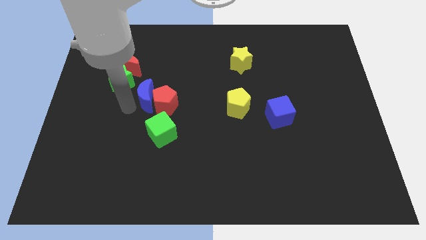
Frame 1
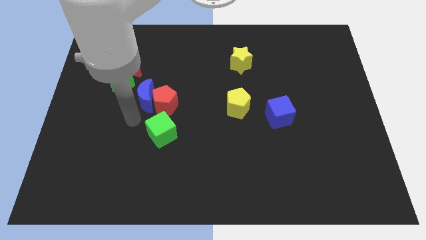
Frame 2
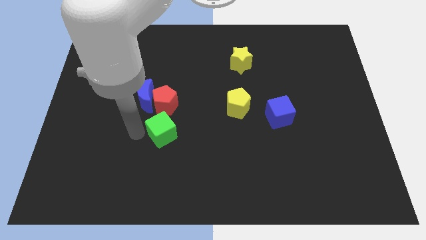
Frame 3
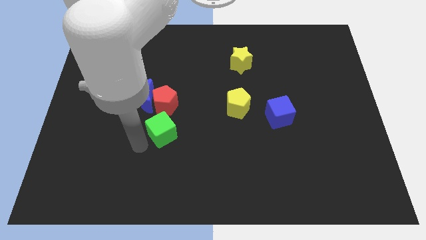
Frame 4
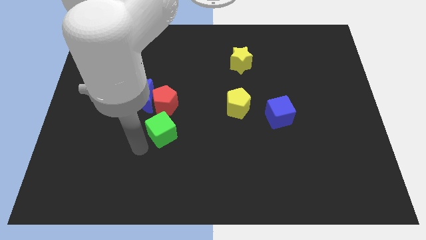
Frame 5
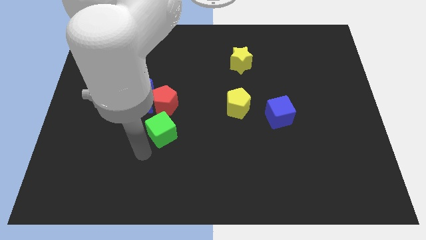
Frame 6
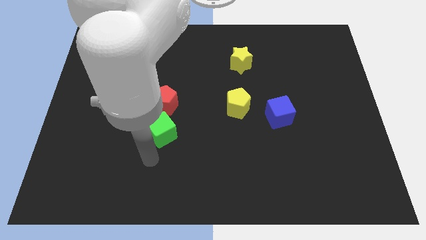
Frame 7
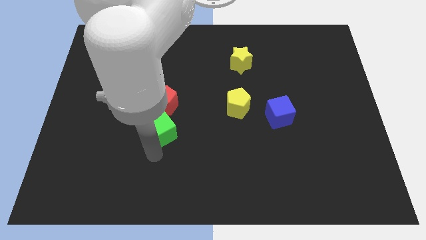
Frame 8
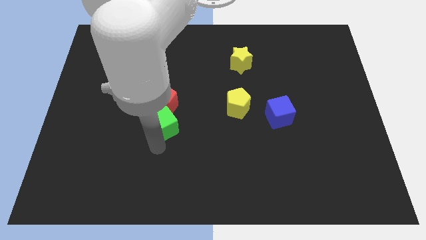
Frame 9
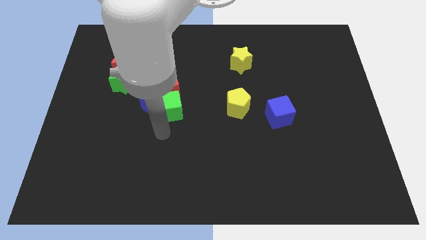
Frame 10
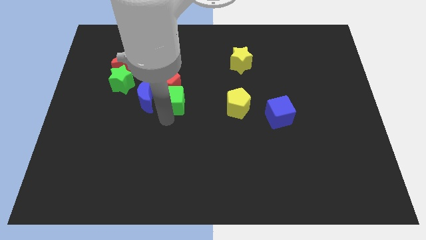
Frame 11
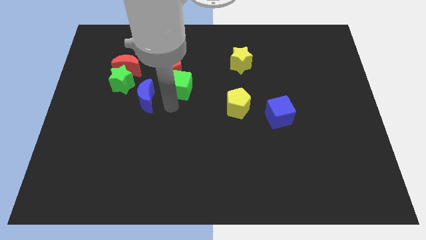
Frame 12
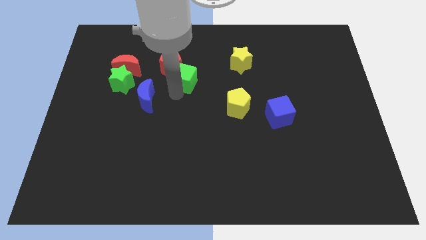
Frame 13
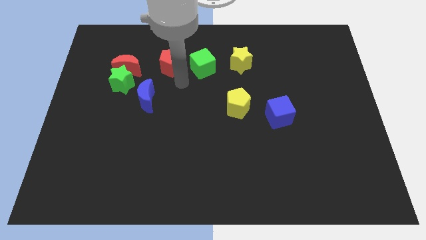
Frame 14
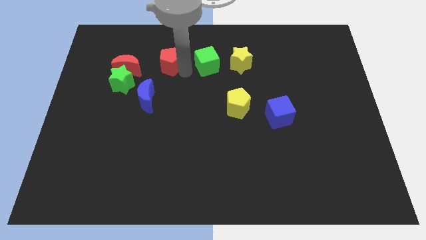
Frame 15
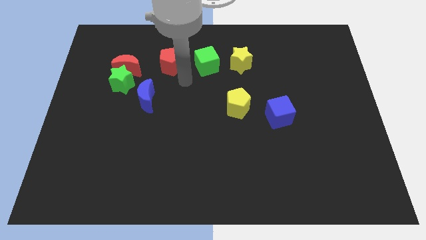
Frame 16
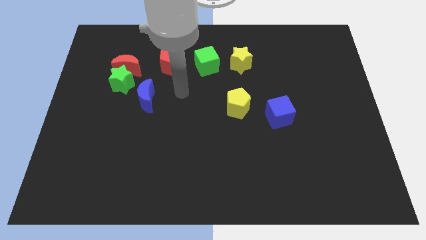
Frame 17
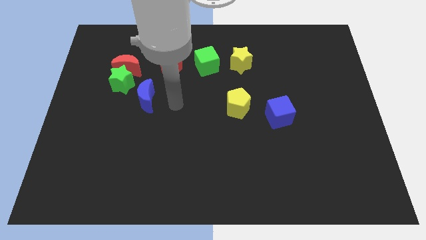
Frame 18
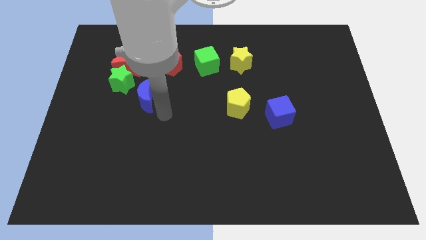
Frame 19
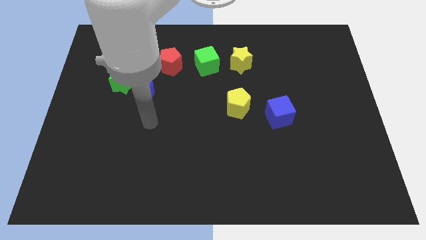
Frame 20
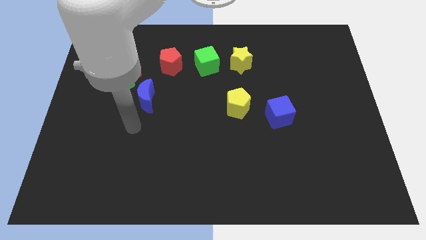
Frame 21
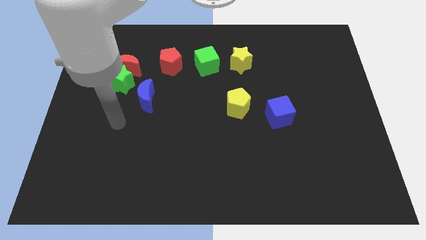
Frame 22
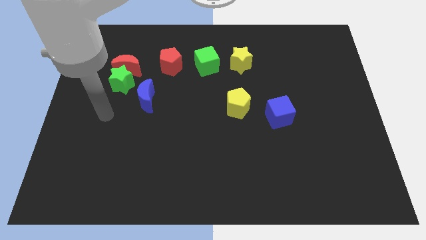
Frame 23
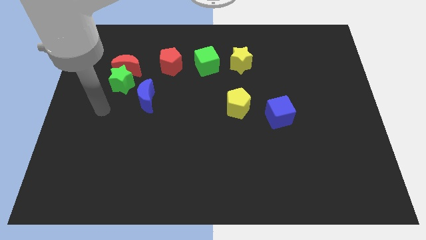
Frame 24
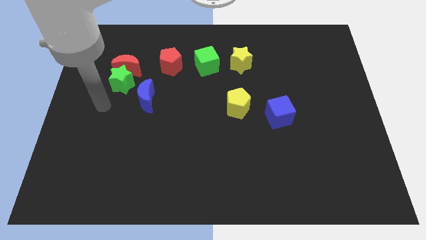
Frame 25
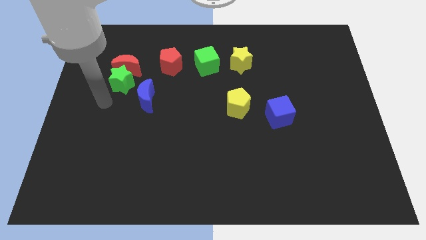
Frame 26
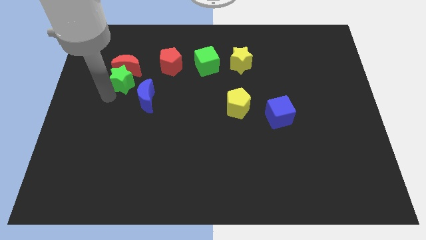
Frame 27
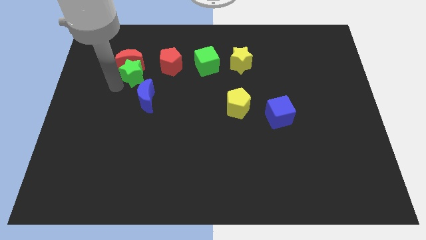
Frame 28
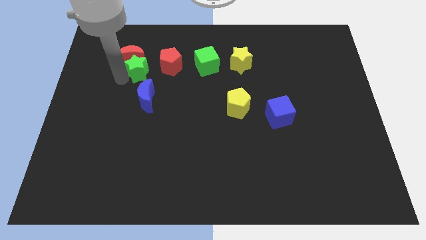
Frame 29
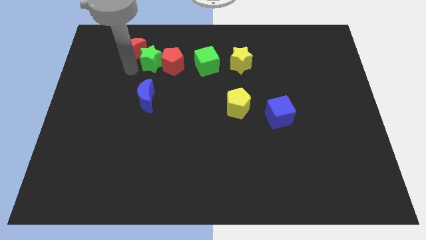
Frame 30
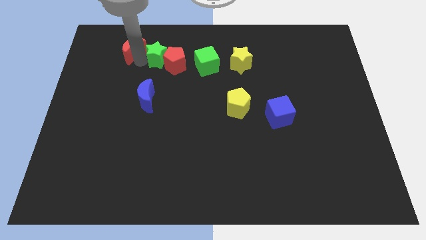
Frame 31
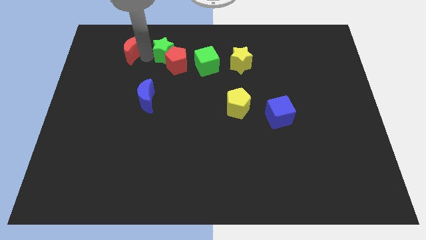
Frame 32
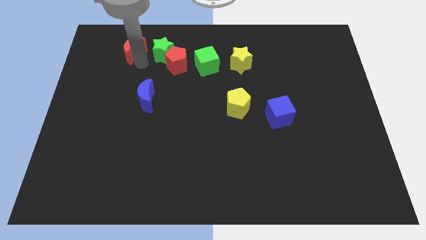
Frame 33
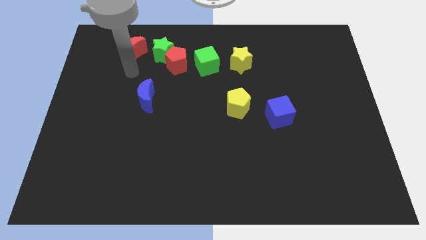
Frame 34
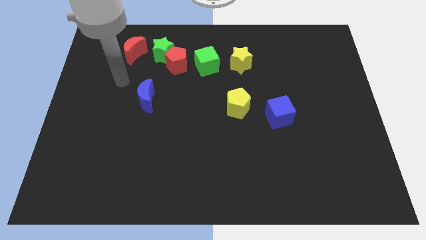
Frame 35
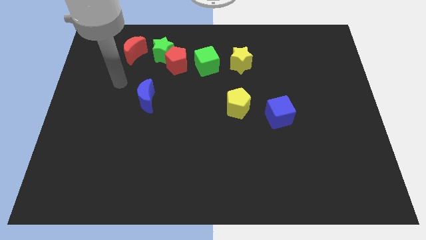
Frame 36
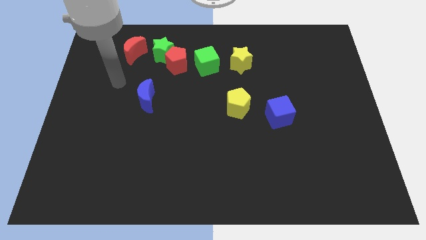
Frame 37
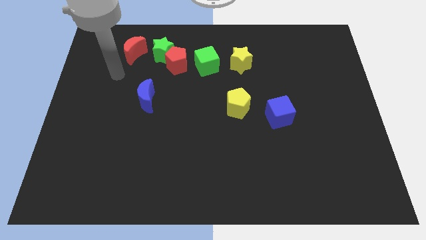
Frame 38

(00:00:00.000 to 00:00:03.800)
push the green blocks to the top of the board

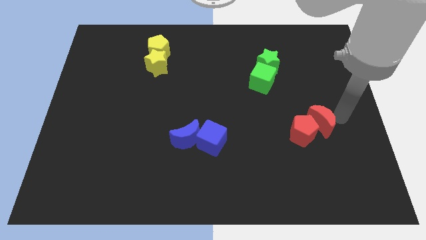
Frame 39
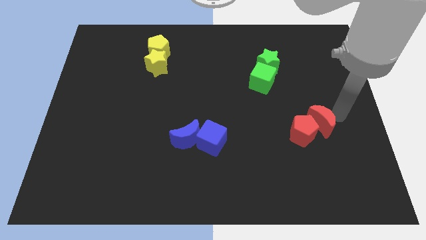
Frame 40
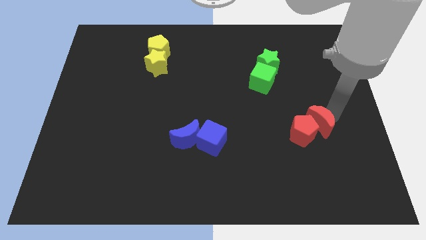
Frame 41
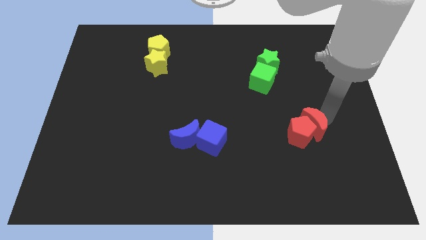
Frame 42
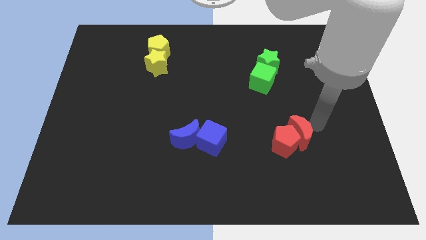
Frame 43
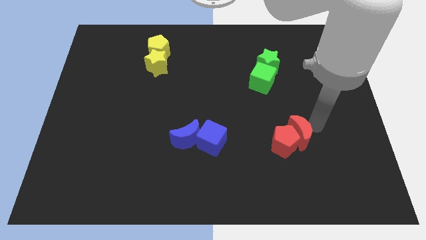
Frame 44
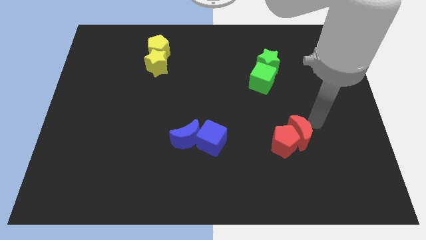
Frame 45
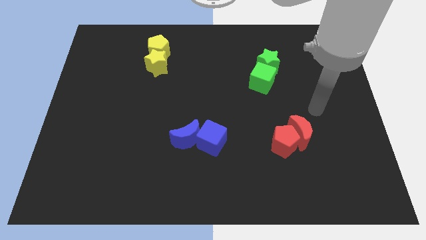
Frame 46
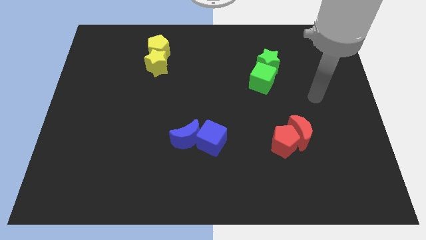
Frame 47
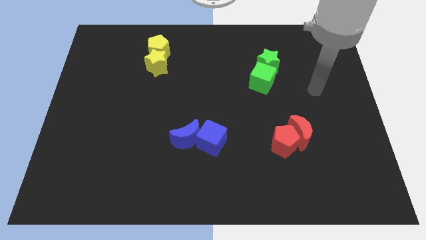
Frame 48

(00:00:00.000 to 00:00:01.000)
move red blocks horizontally to the right side of the blue blocks

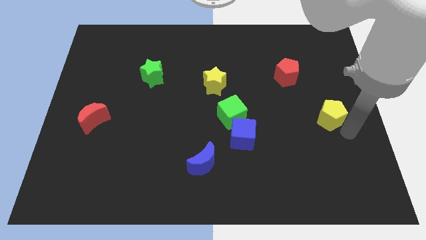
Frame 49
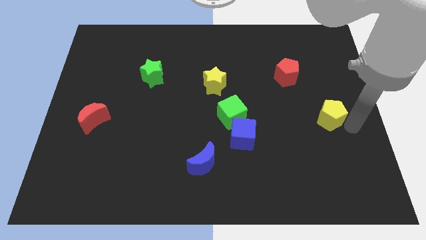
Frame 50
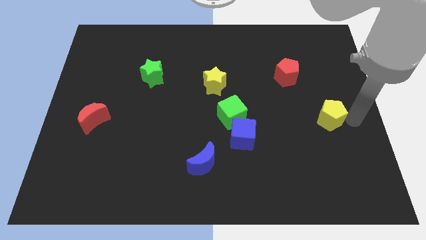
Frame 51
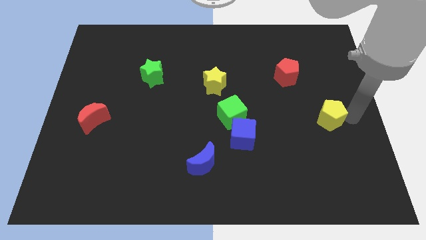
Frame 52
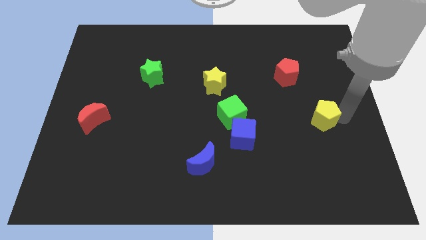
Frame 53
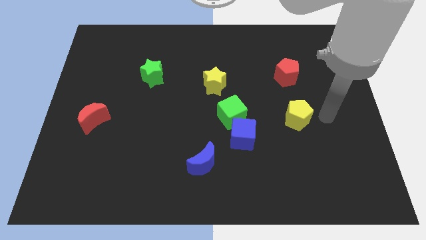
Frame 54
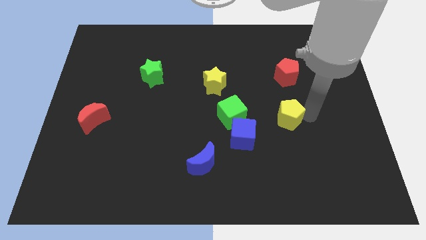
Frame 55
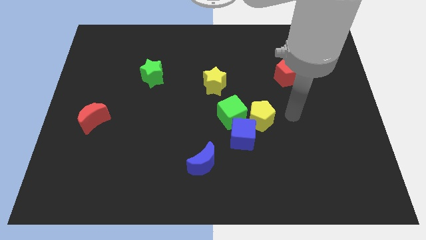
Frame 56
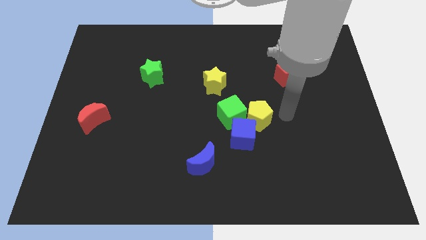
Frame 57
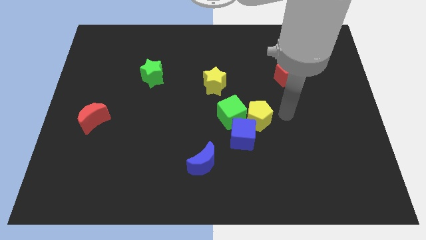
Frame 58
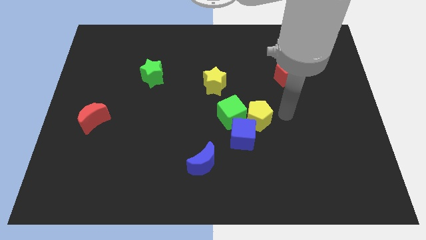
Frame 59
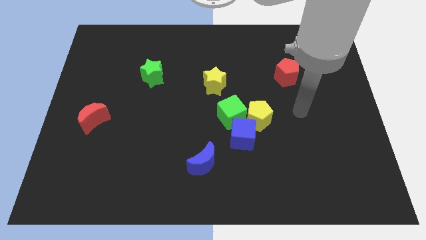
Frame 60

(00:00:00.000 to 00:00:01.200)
push the yellow pentagon to the right of the green cube

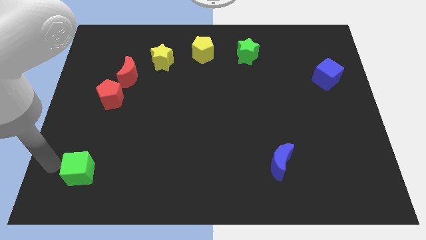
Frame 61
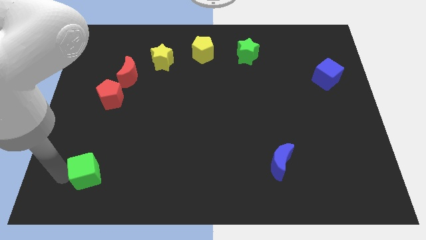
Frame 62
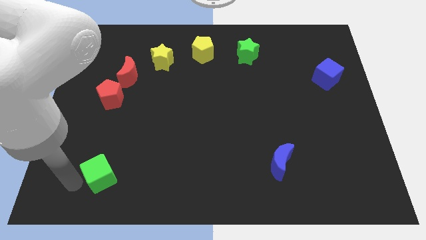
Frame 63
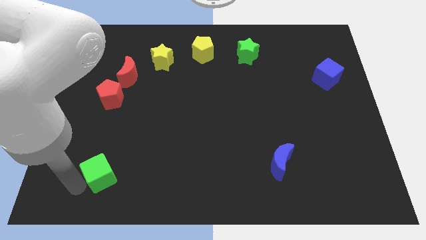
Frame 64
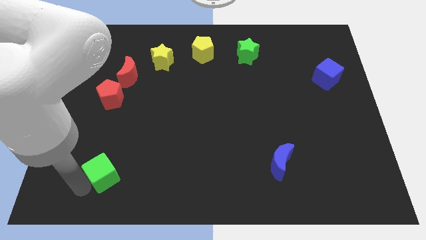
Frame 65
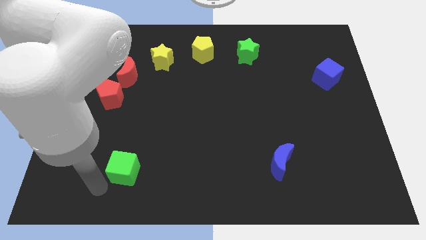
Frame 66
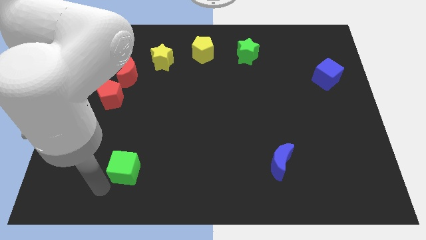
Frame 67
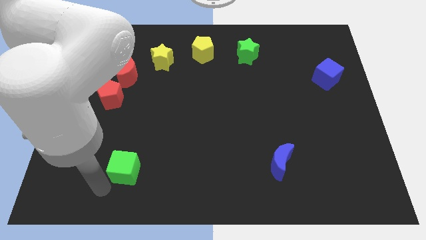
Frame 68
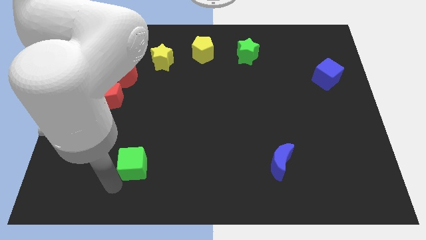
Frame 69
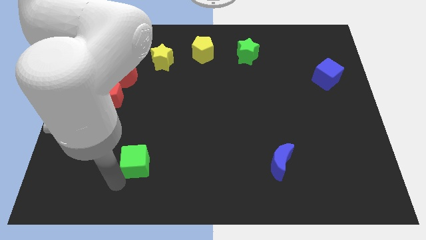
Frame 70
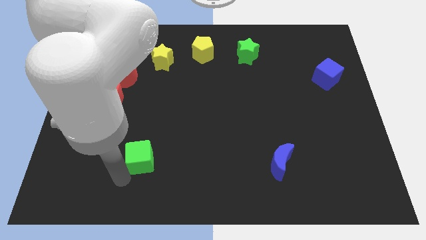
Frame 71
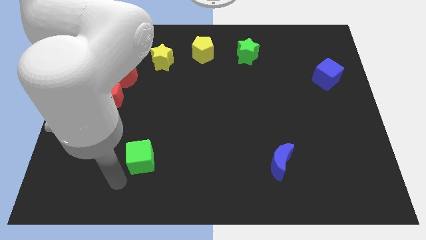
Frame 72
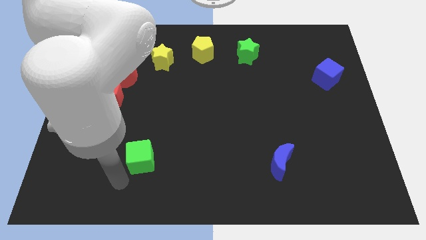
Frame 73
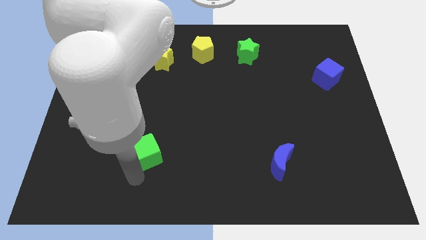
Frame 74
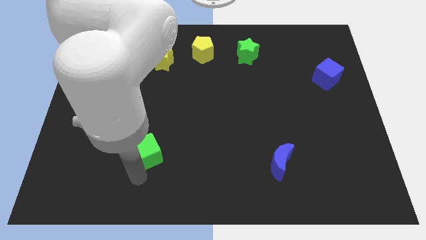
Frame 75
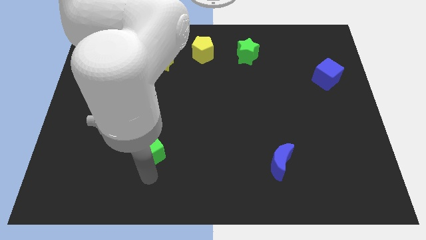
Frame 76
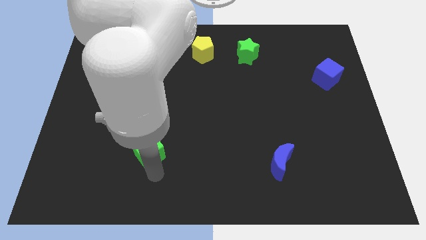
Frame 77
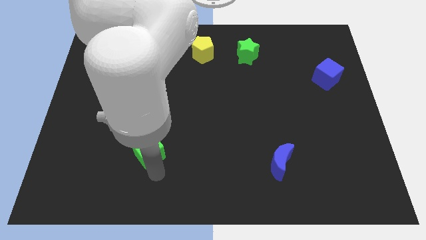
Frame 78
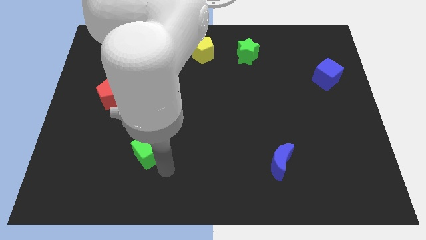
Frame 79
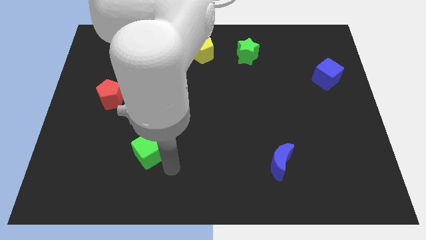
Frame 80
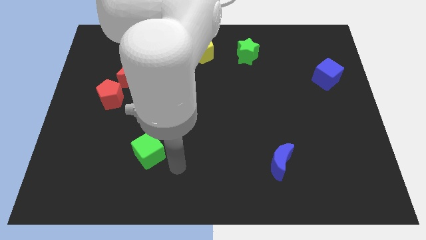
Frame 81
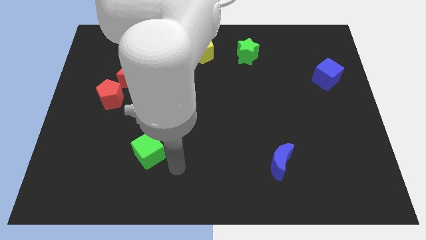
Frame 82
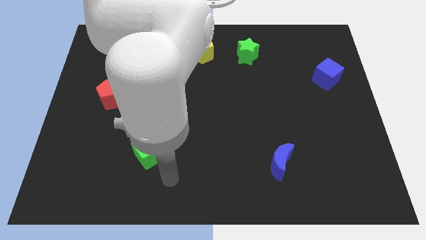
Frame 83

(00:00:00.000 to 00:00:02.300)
push green cube towards right side of the board

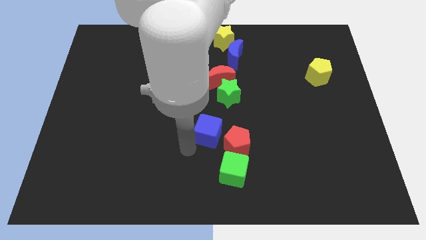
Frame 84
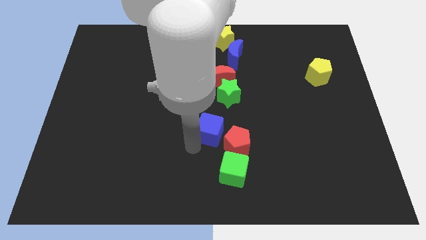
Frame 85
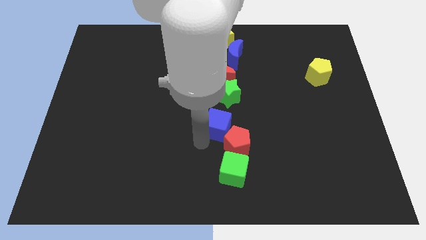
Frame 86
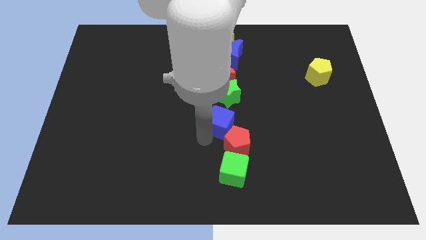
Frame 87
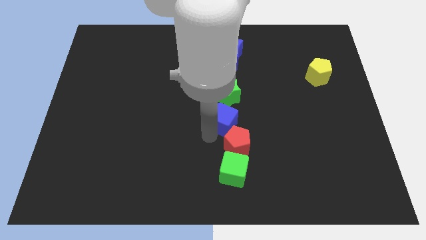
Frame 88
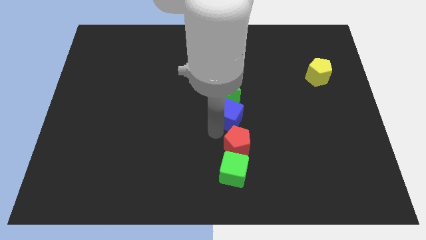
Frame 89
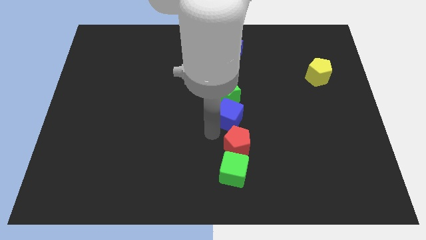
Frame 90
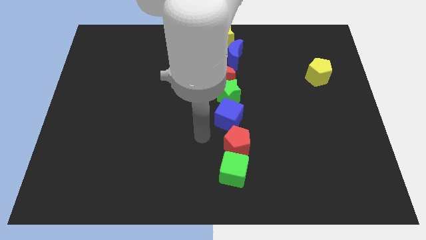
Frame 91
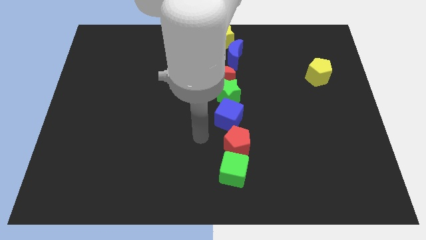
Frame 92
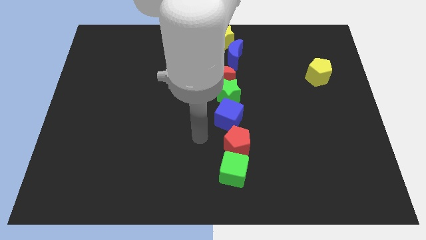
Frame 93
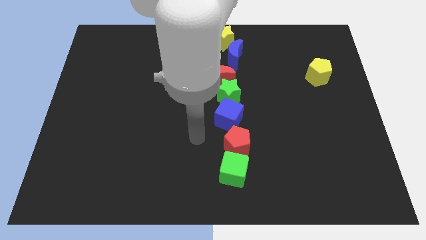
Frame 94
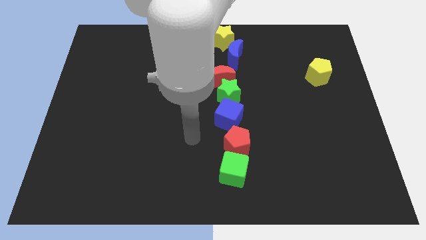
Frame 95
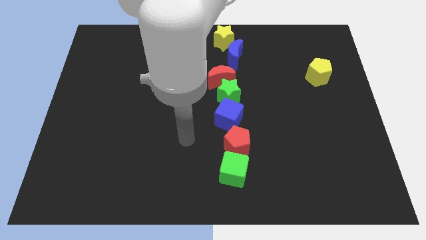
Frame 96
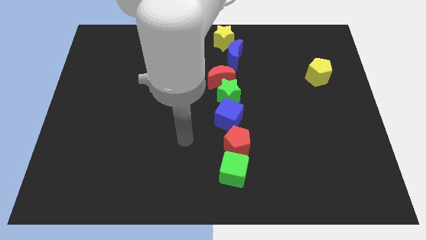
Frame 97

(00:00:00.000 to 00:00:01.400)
place the blue cube below the green star
